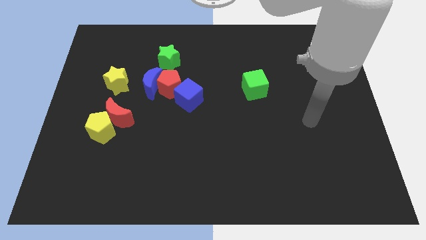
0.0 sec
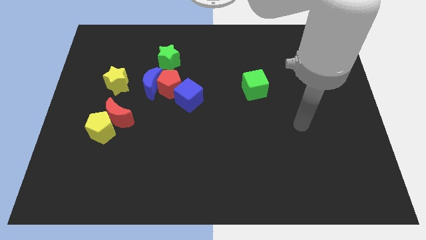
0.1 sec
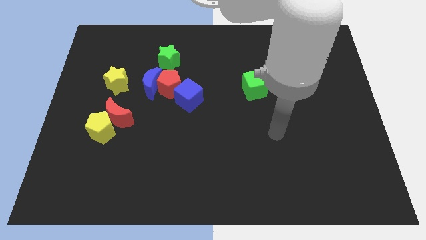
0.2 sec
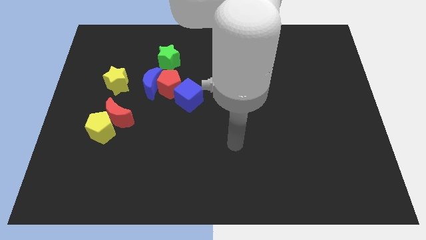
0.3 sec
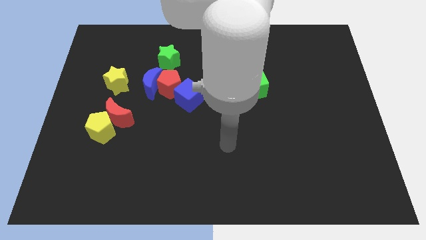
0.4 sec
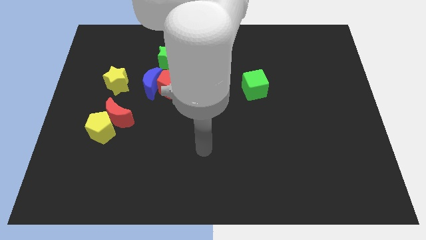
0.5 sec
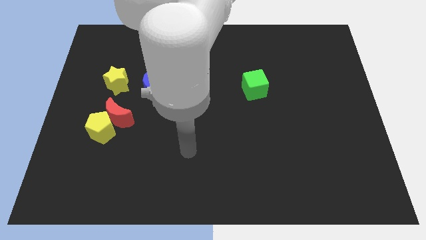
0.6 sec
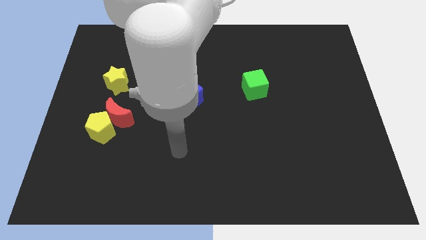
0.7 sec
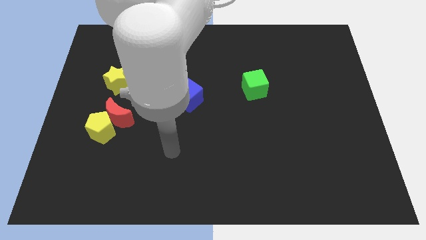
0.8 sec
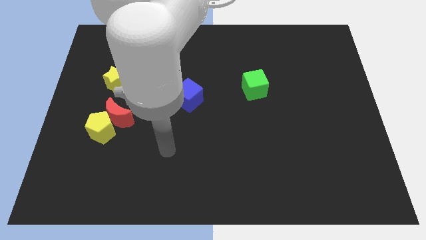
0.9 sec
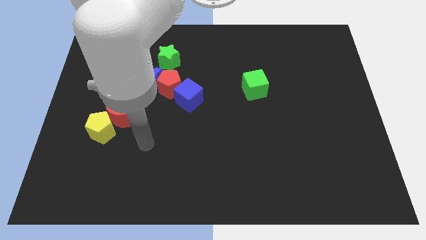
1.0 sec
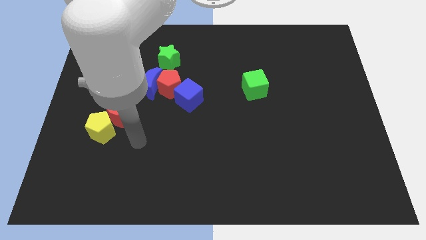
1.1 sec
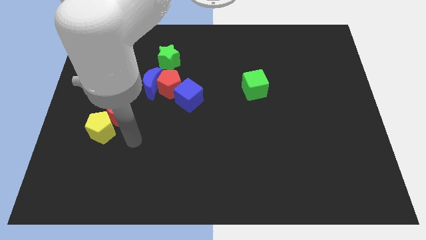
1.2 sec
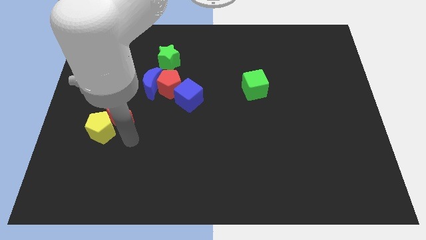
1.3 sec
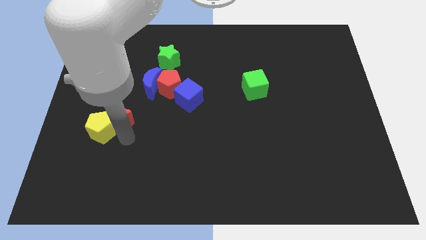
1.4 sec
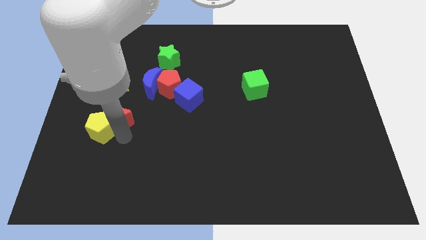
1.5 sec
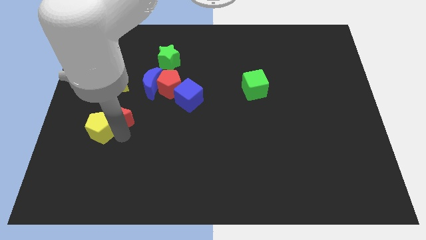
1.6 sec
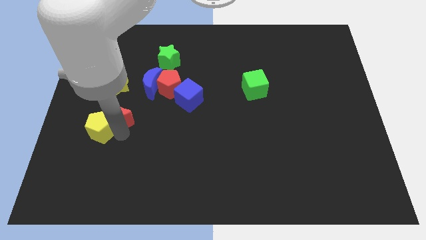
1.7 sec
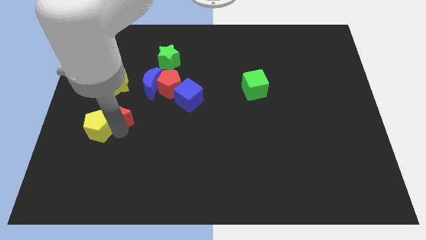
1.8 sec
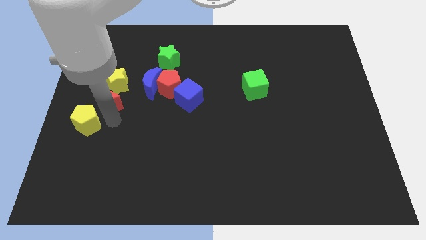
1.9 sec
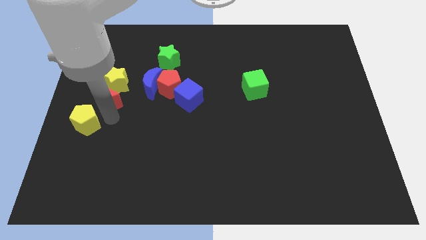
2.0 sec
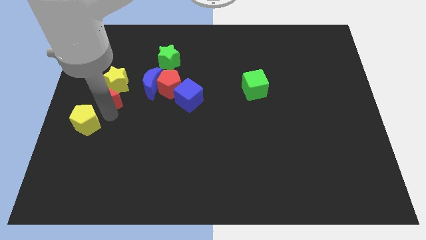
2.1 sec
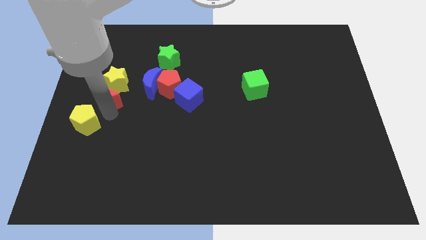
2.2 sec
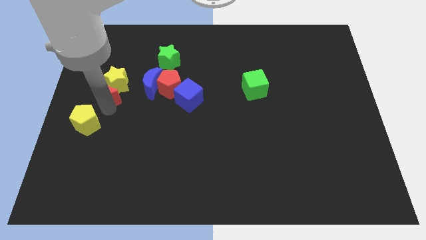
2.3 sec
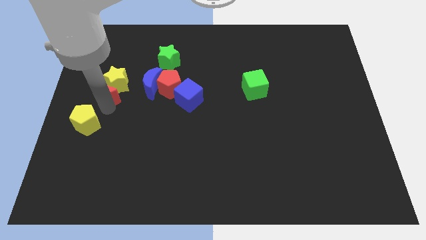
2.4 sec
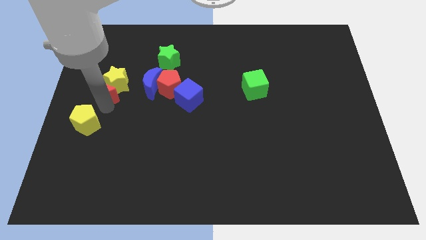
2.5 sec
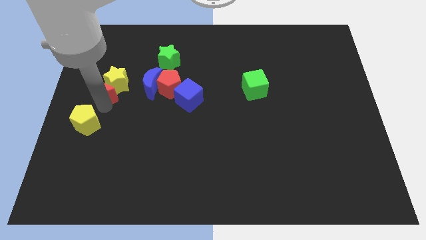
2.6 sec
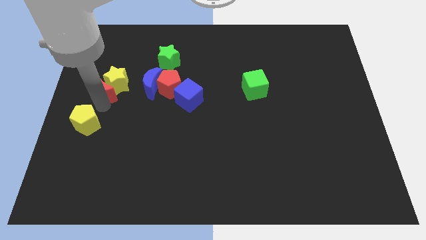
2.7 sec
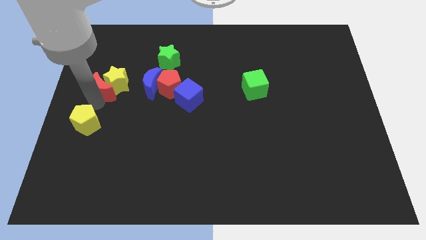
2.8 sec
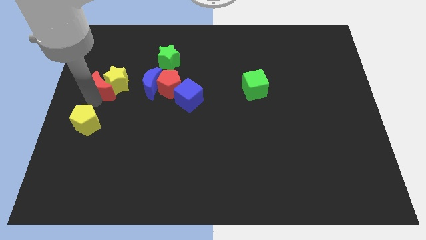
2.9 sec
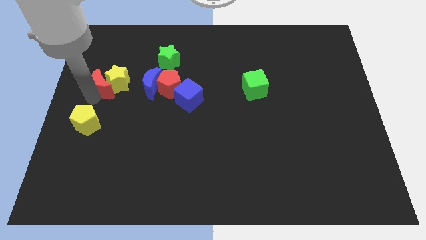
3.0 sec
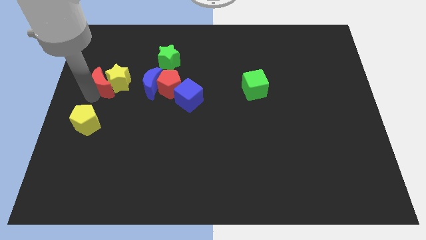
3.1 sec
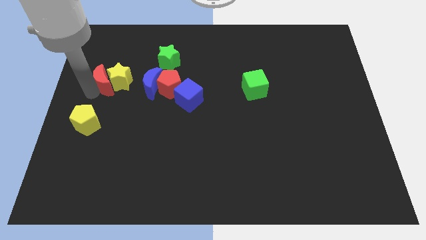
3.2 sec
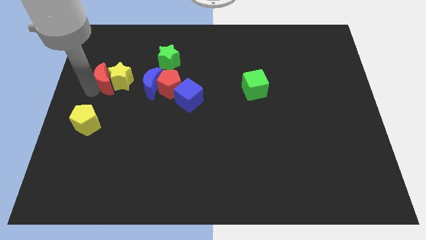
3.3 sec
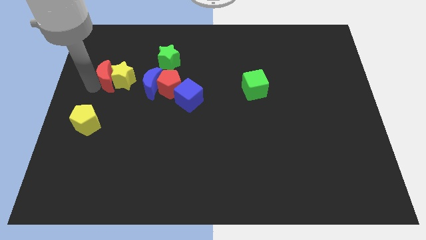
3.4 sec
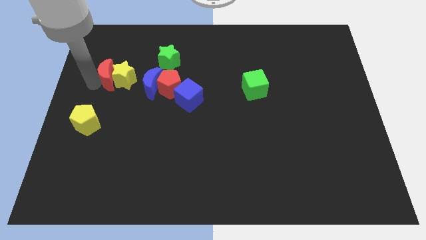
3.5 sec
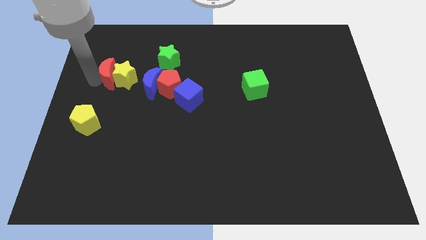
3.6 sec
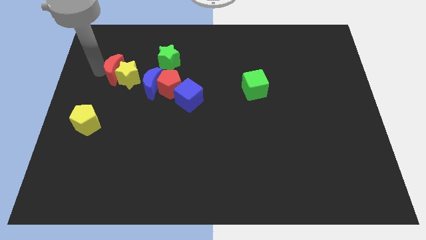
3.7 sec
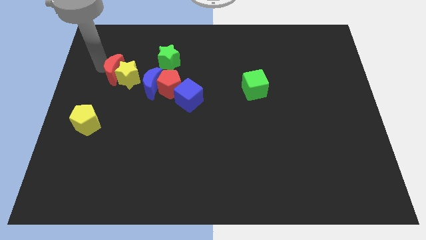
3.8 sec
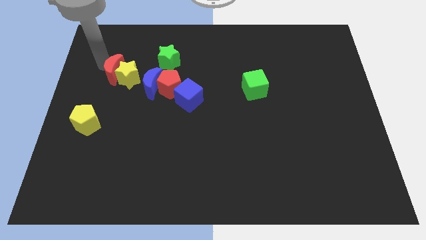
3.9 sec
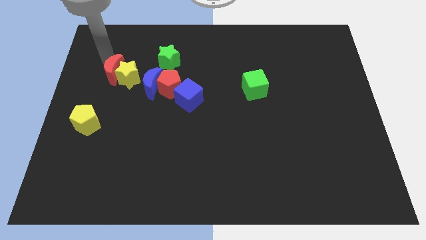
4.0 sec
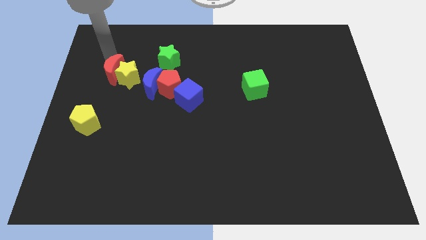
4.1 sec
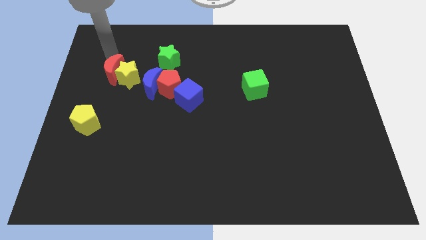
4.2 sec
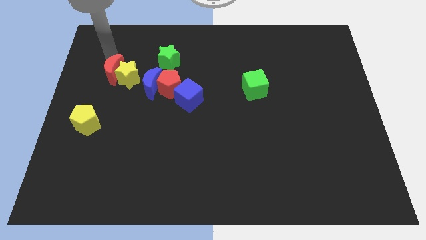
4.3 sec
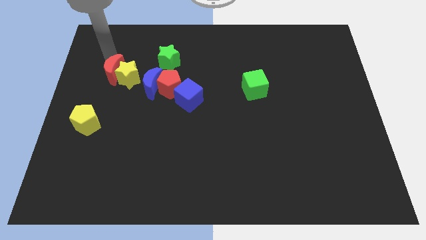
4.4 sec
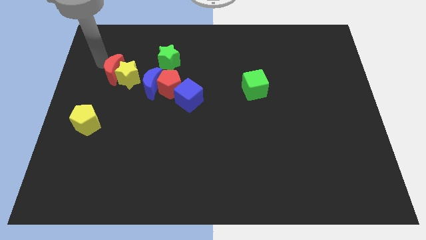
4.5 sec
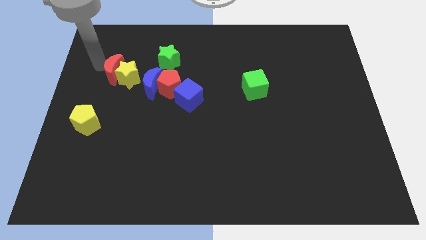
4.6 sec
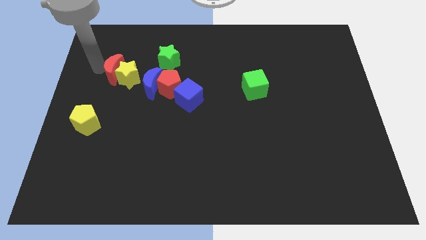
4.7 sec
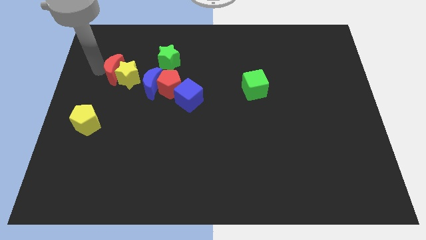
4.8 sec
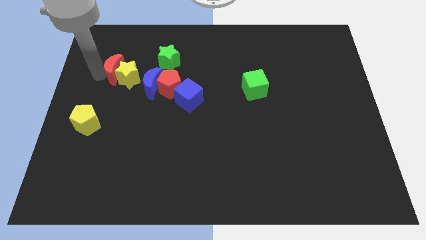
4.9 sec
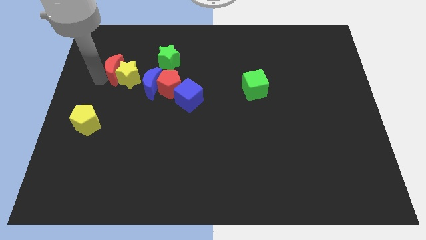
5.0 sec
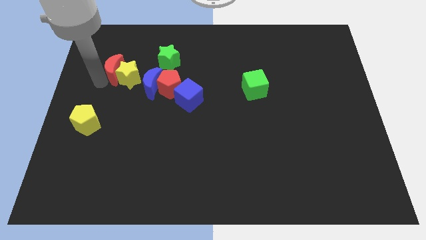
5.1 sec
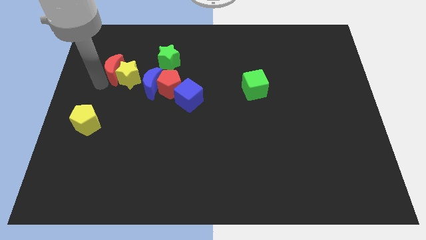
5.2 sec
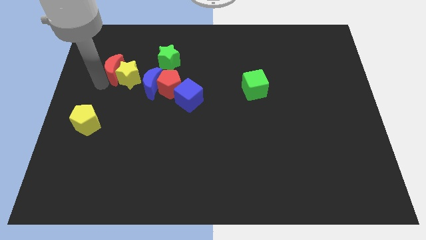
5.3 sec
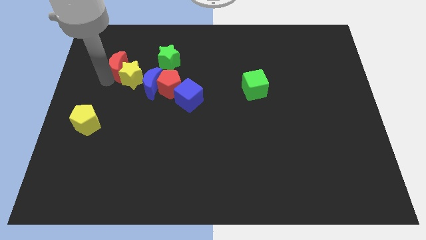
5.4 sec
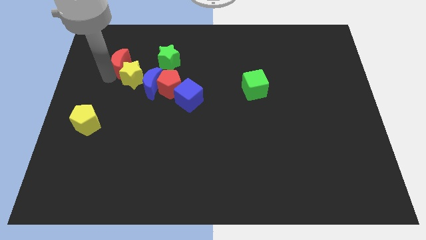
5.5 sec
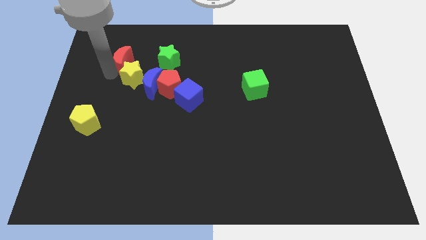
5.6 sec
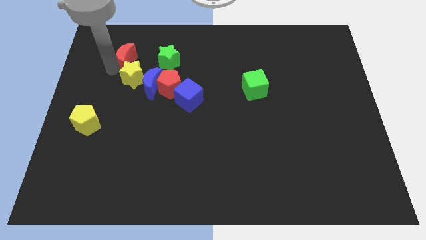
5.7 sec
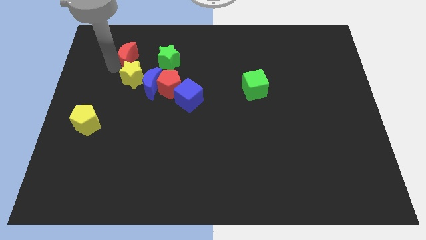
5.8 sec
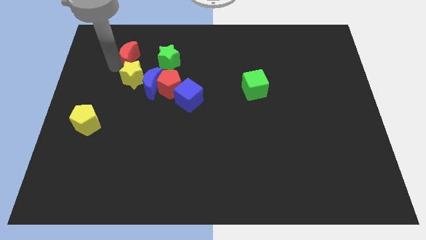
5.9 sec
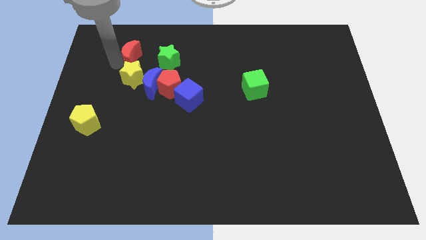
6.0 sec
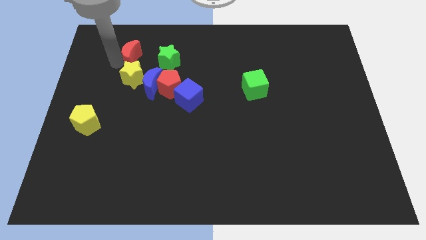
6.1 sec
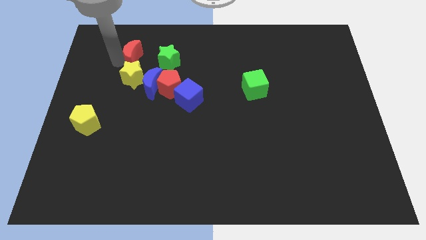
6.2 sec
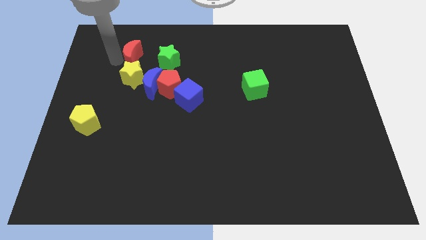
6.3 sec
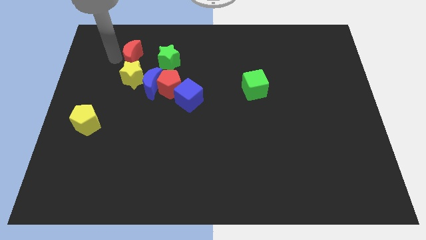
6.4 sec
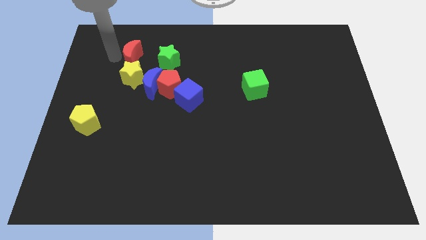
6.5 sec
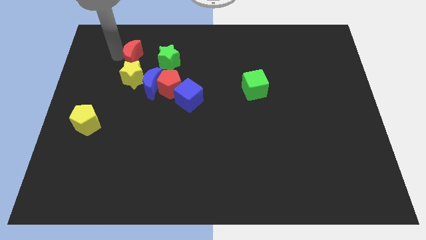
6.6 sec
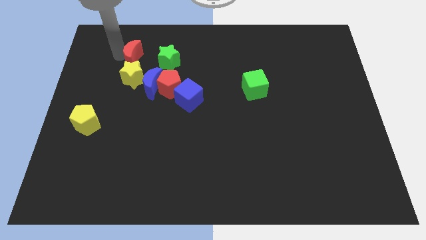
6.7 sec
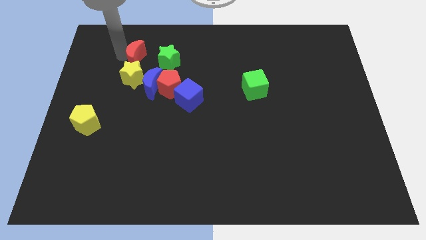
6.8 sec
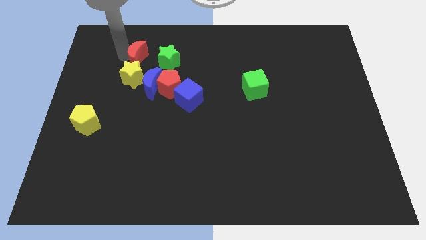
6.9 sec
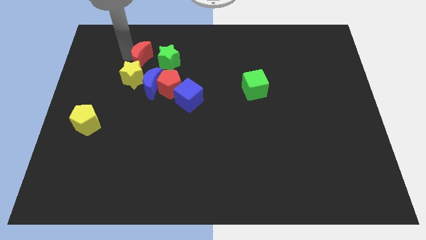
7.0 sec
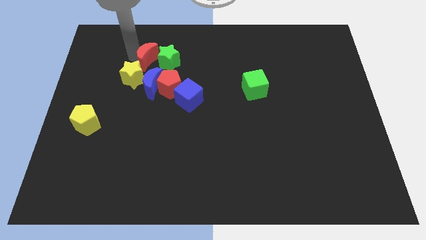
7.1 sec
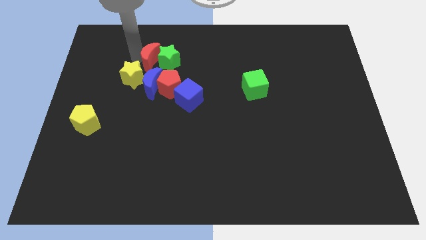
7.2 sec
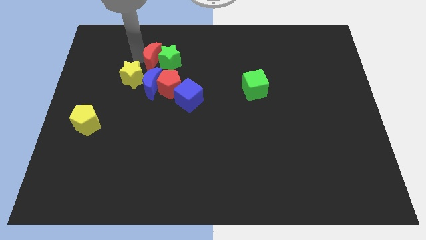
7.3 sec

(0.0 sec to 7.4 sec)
put the red moon next to the green star

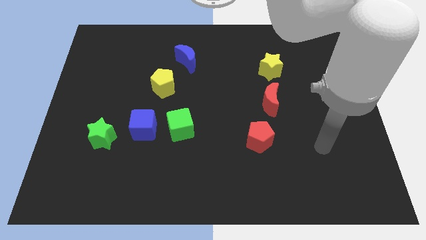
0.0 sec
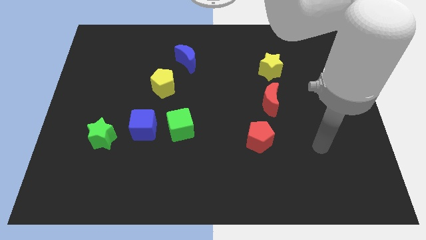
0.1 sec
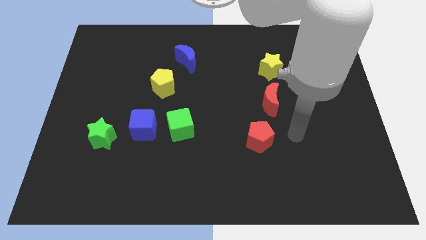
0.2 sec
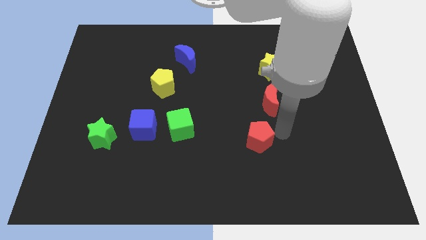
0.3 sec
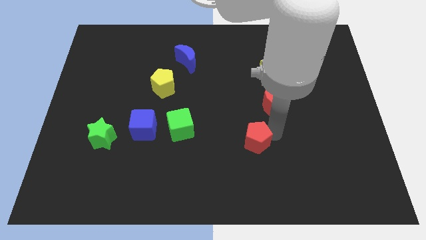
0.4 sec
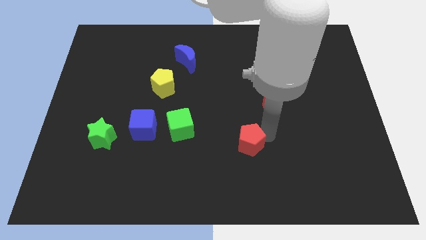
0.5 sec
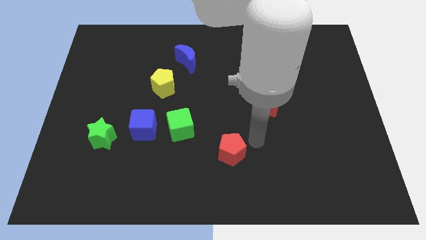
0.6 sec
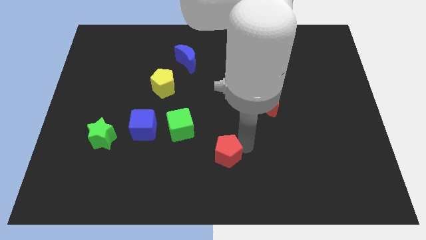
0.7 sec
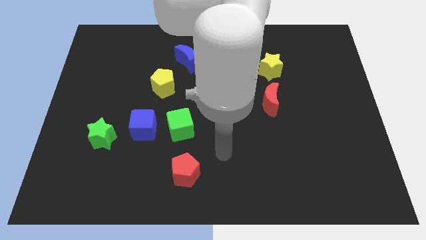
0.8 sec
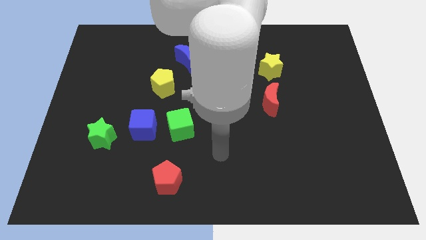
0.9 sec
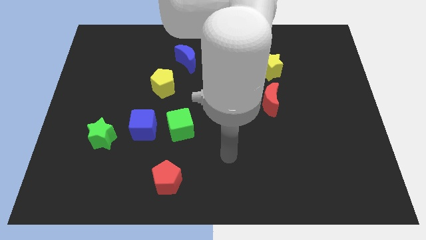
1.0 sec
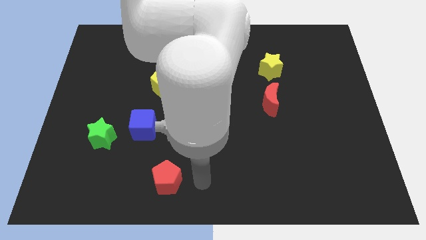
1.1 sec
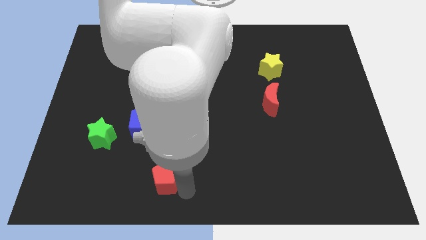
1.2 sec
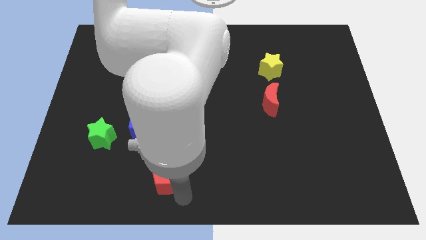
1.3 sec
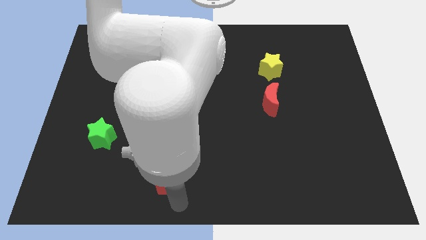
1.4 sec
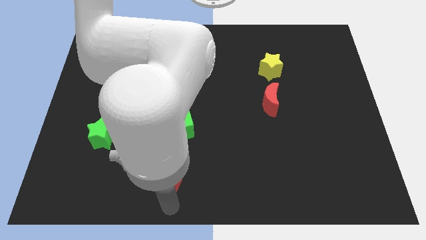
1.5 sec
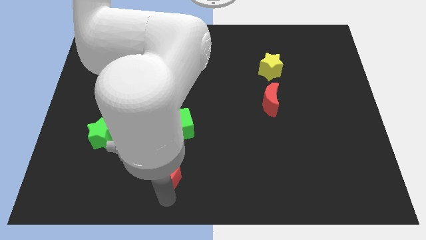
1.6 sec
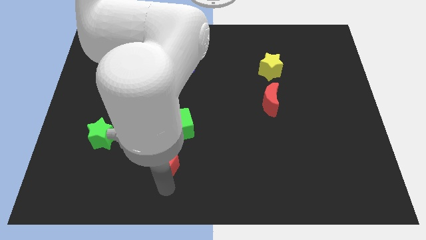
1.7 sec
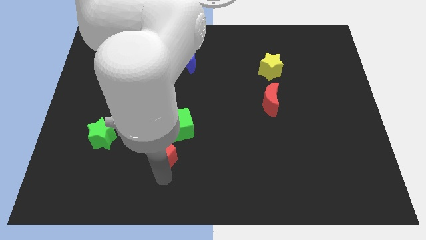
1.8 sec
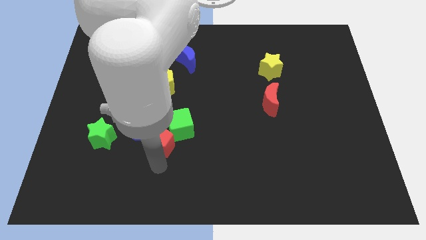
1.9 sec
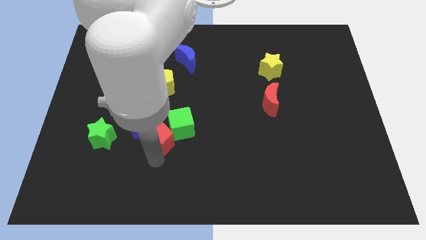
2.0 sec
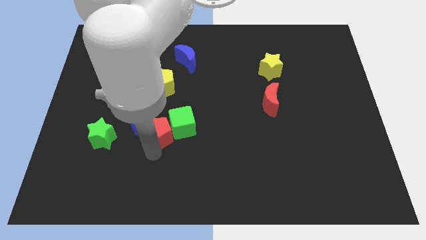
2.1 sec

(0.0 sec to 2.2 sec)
slide the red pentagon next to the blue cube
